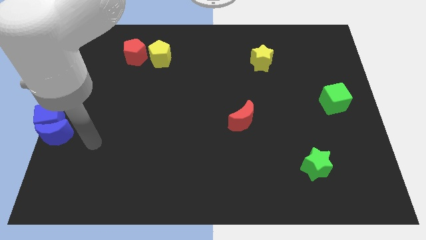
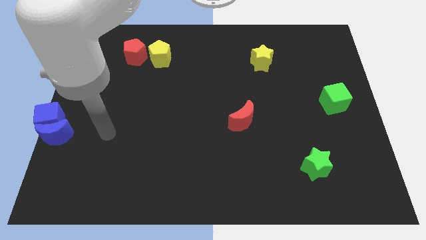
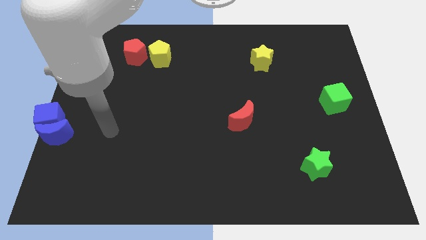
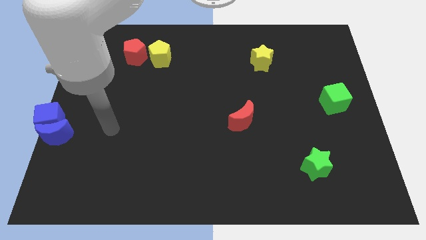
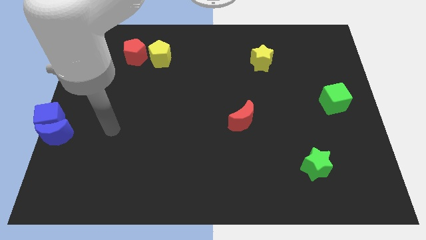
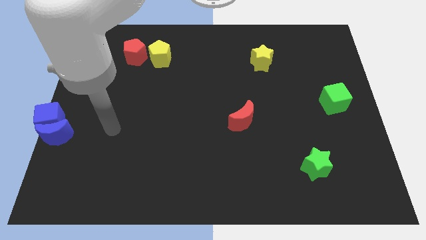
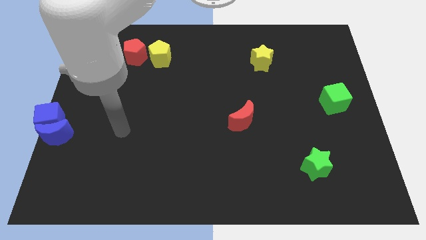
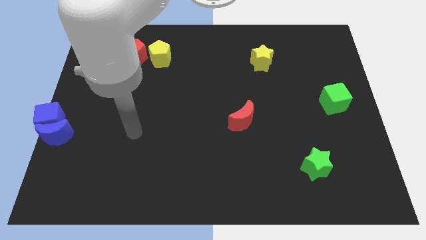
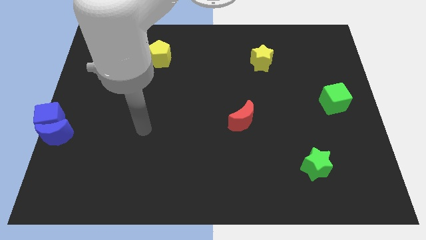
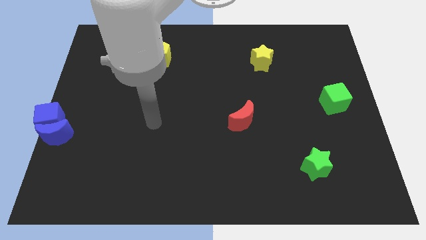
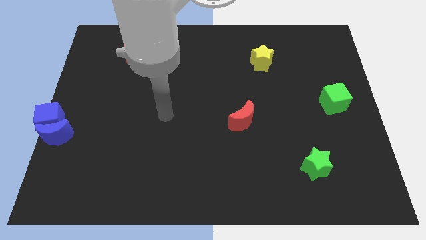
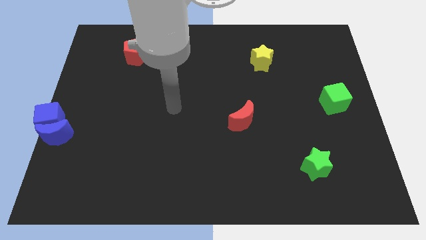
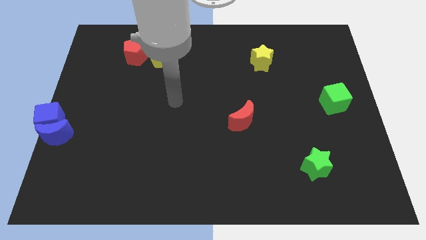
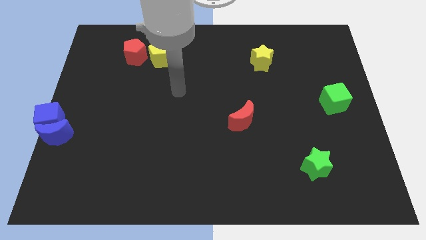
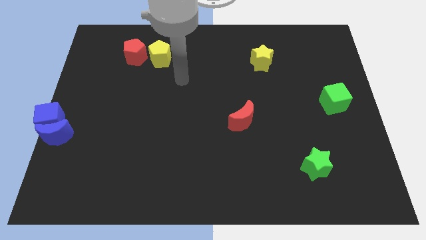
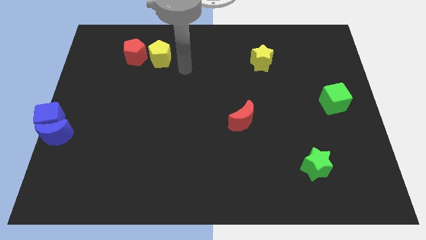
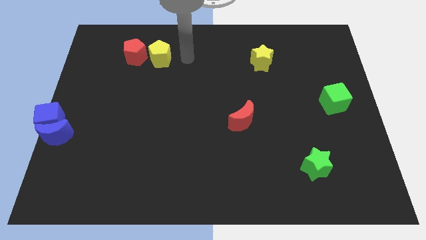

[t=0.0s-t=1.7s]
place the arm to the right of the yellow pentagon

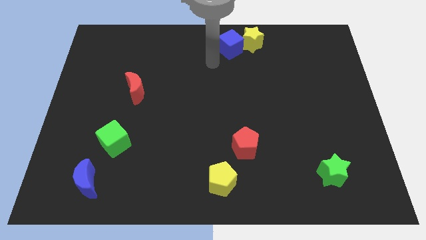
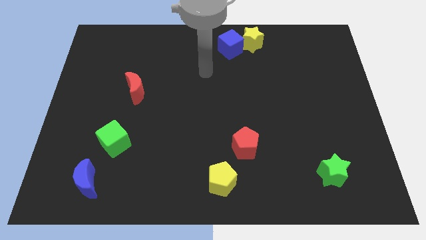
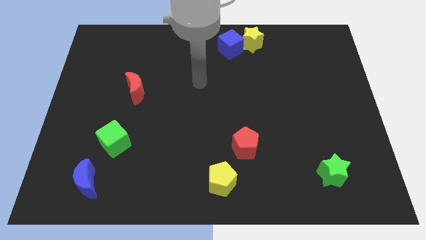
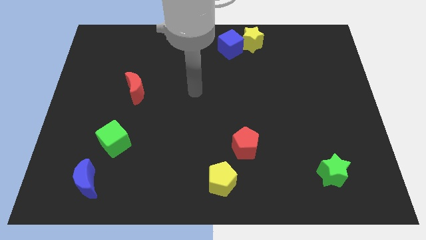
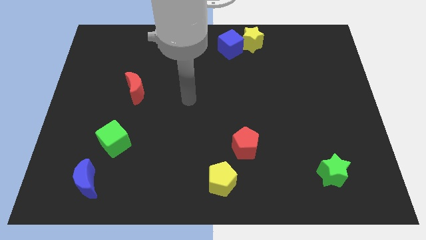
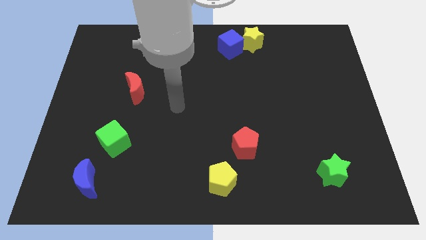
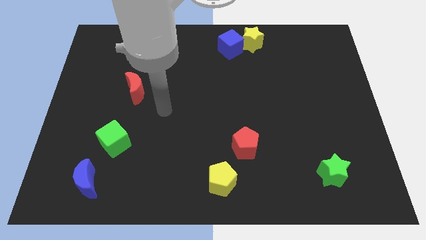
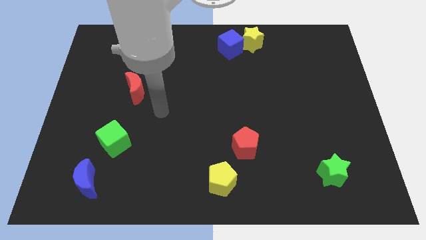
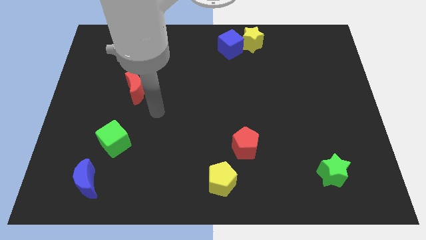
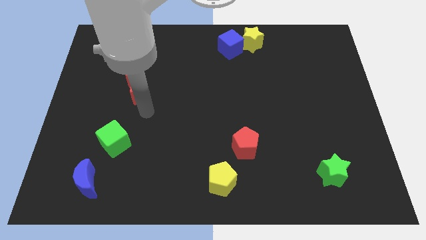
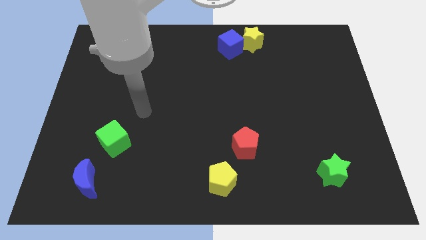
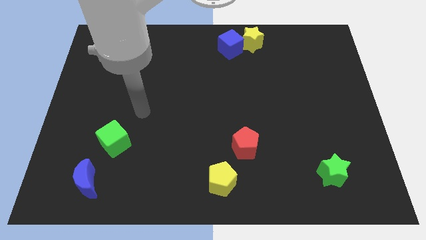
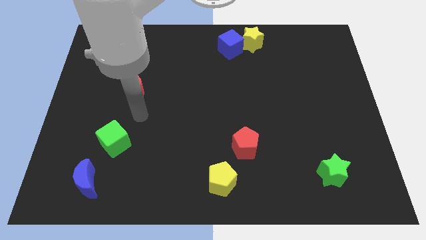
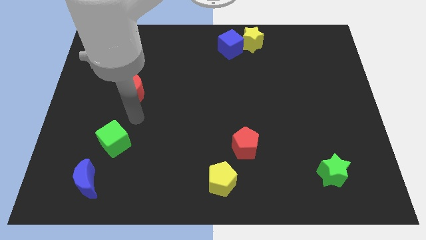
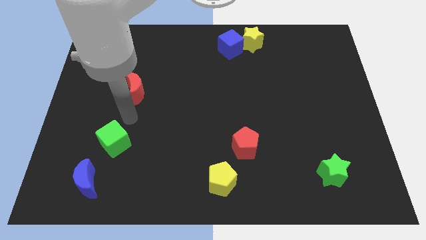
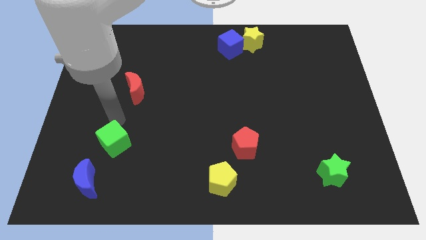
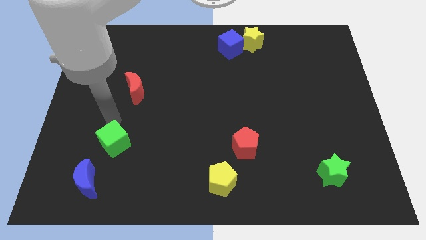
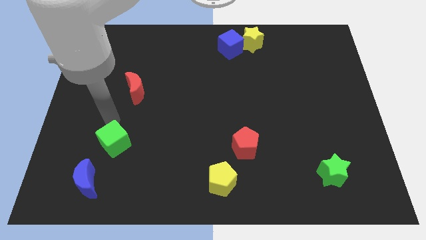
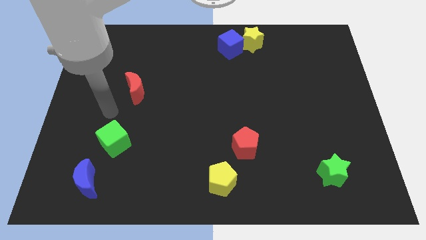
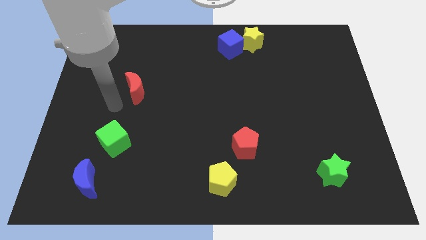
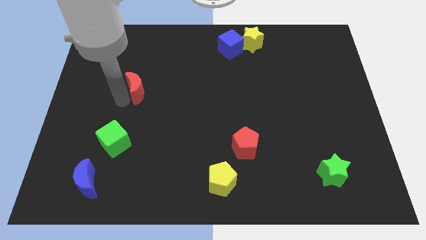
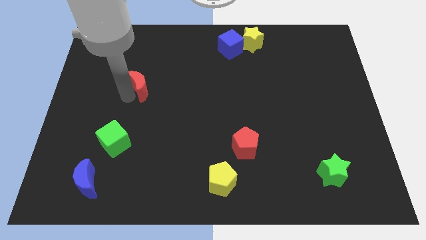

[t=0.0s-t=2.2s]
move your arm and point to the left of red moon

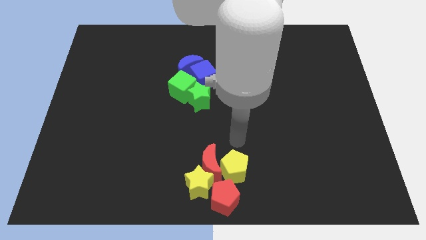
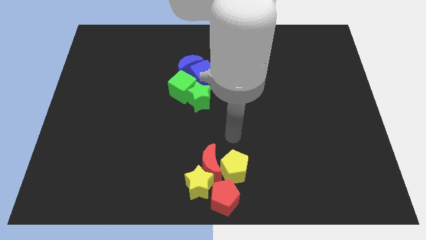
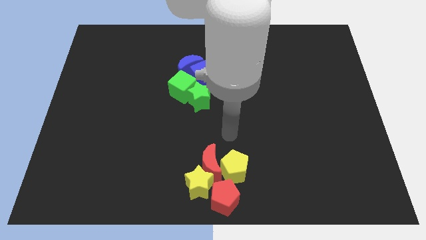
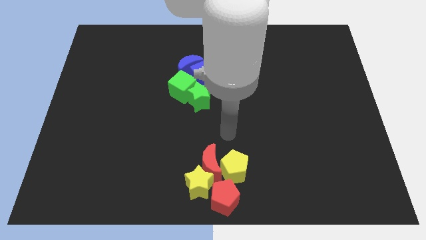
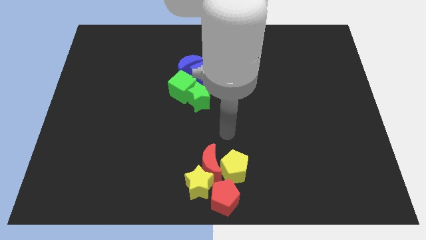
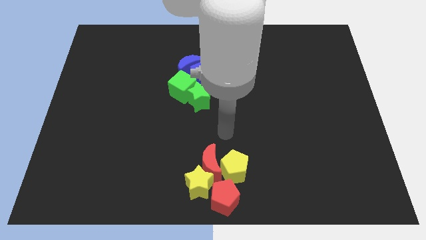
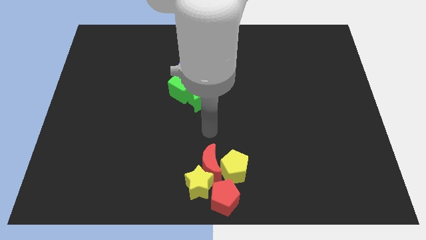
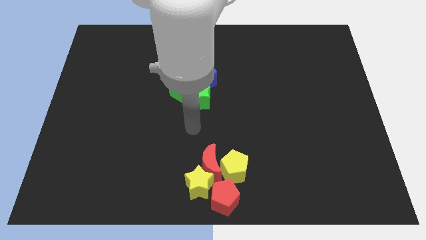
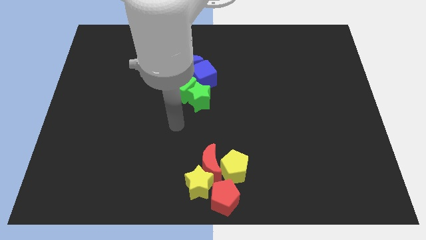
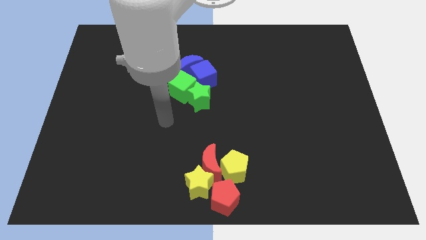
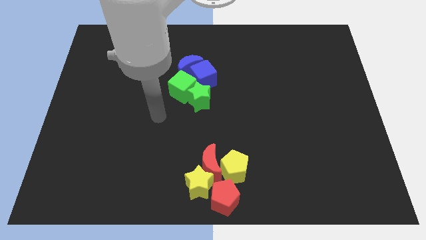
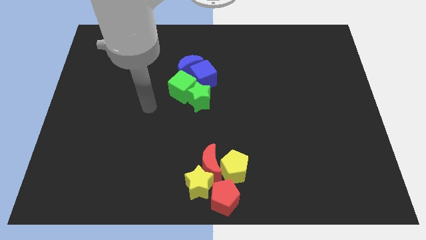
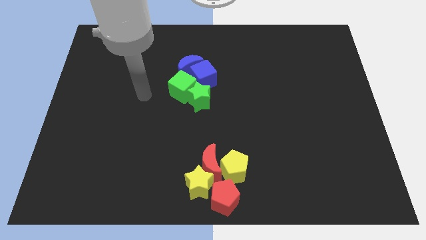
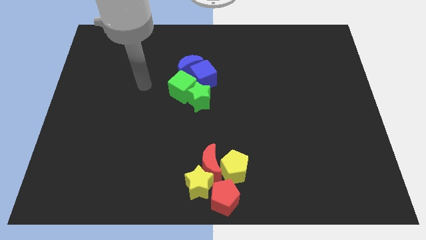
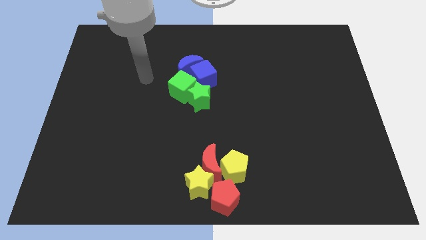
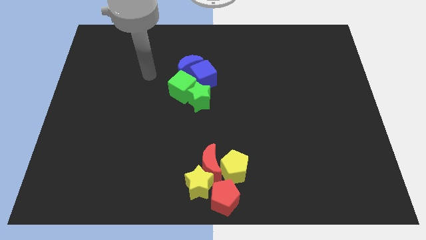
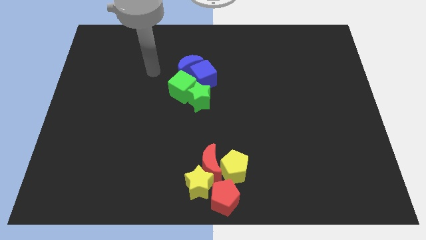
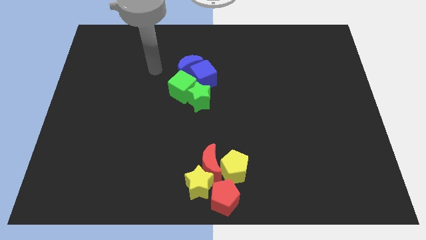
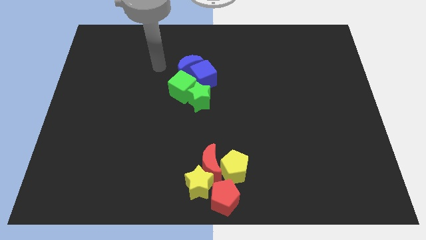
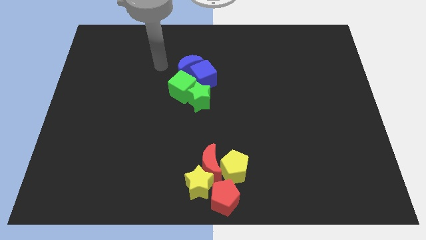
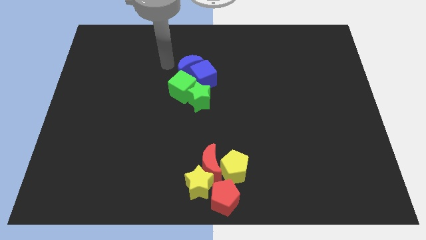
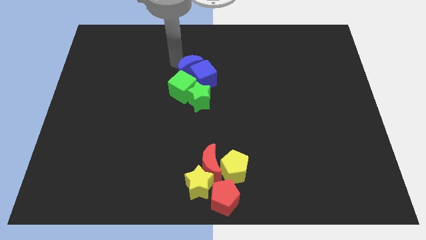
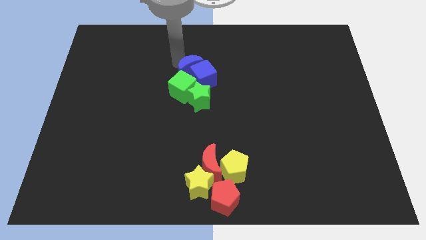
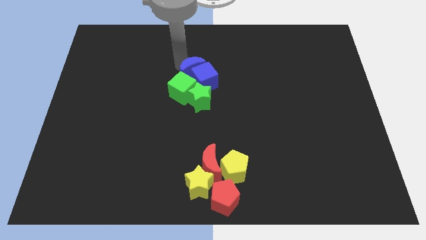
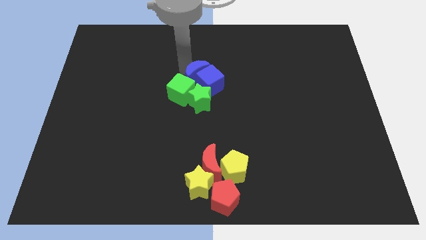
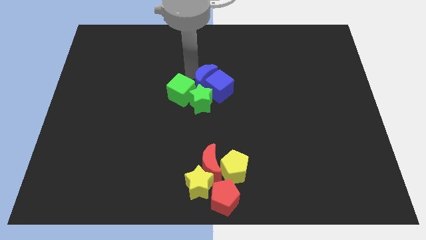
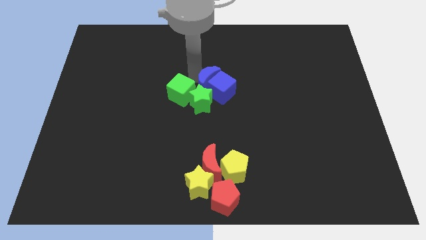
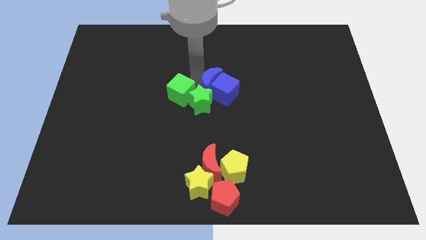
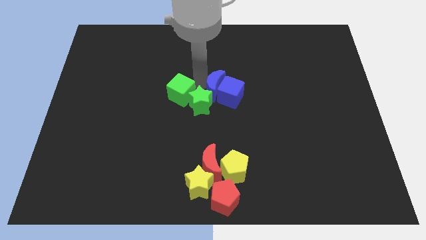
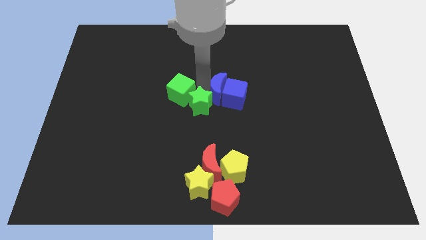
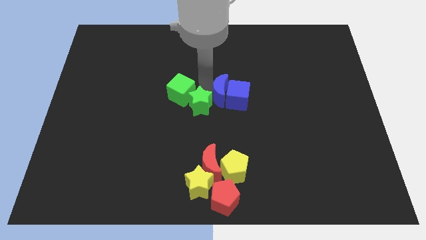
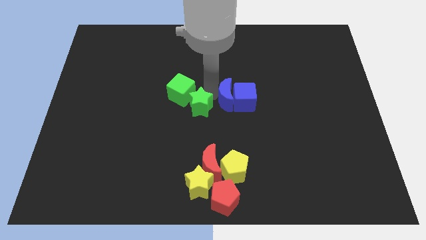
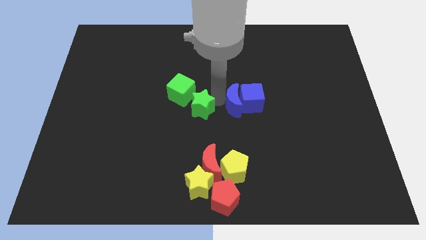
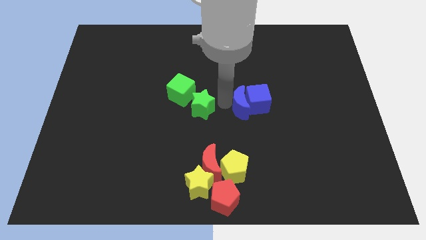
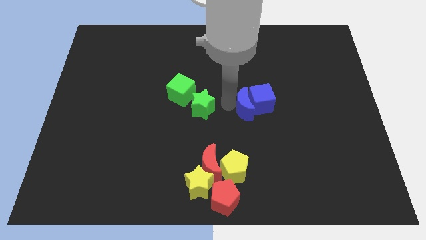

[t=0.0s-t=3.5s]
separate the blue blocks from the green blocks

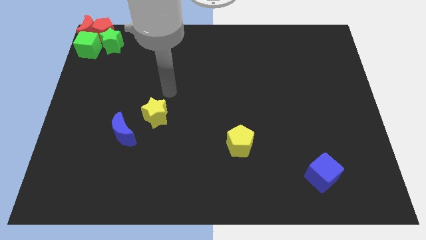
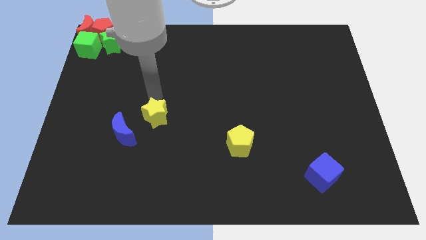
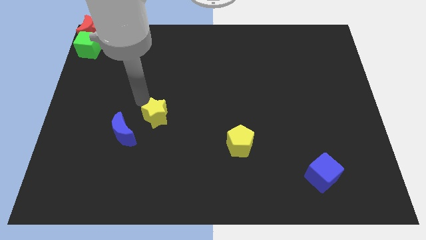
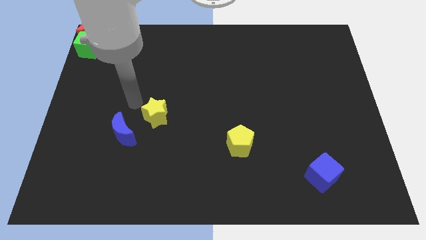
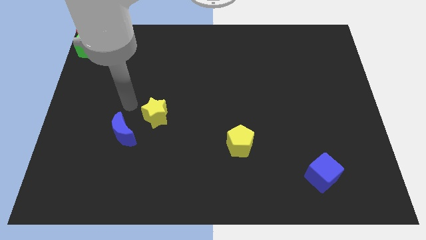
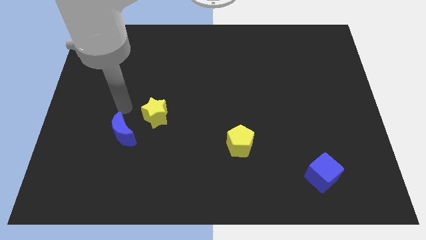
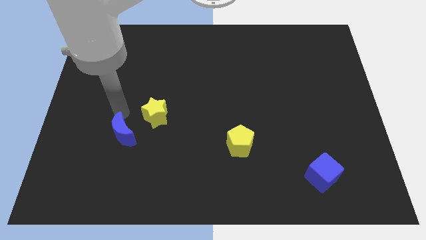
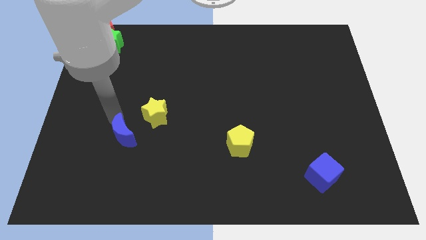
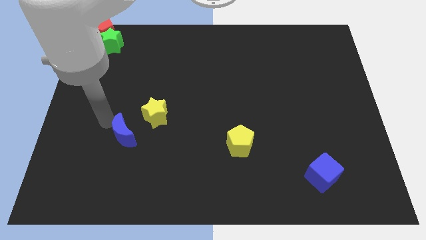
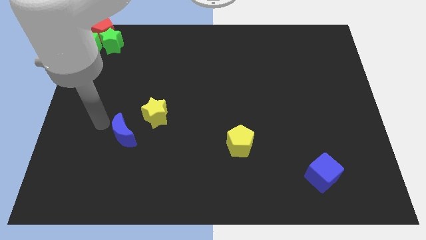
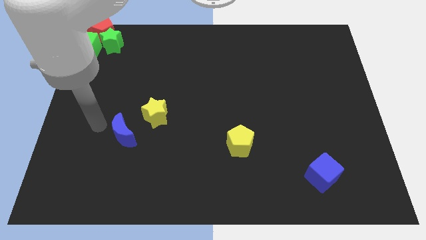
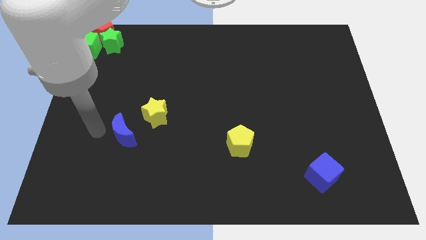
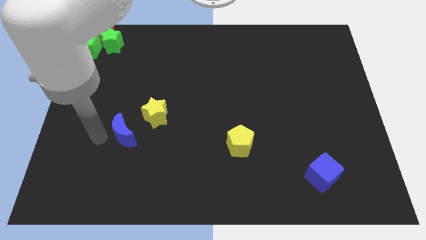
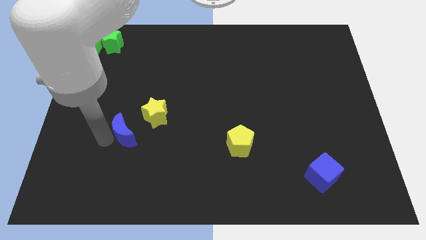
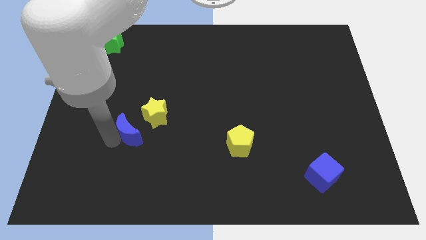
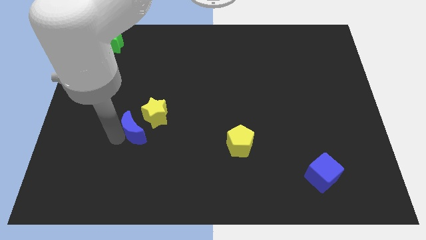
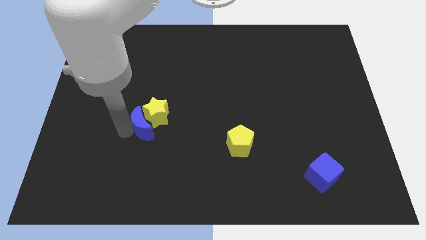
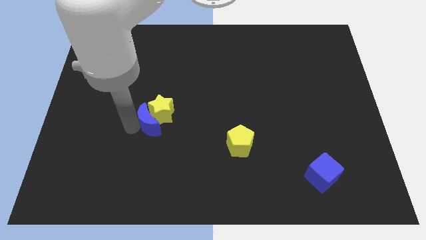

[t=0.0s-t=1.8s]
move the blue crescent into the yellow star
